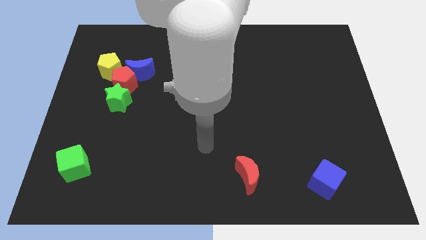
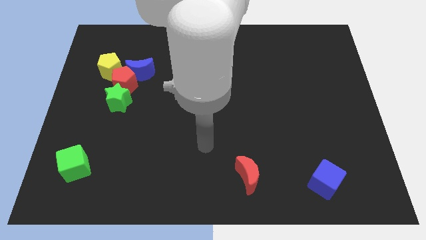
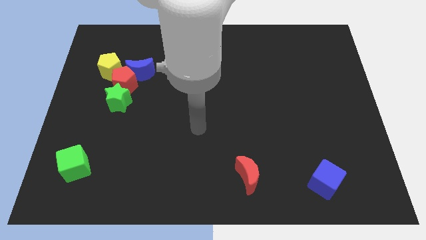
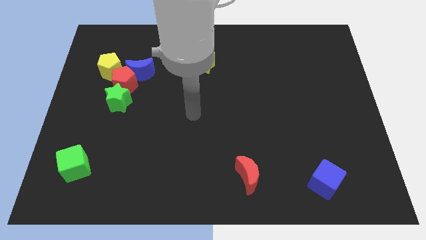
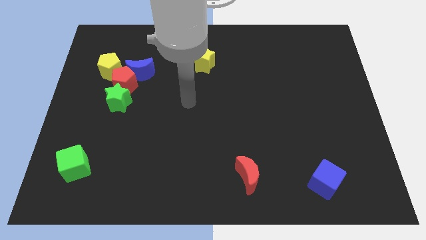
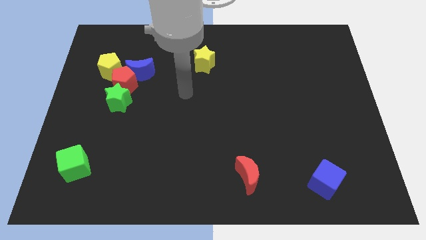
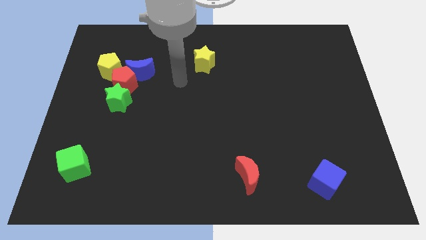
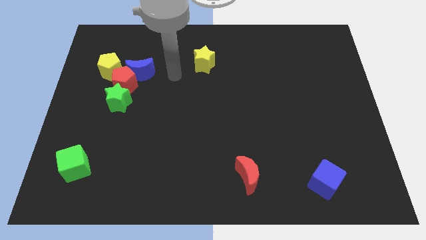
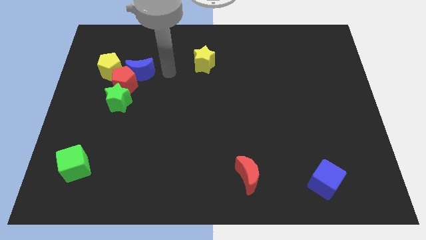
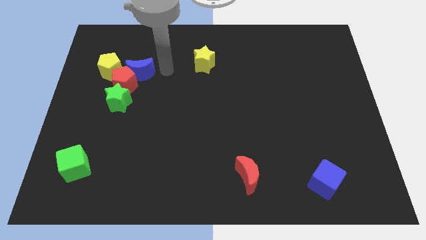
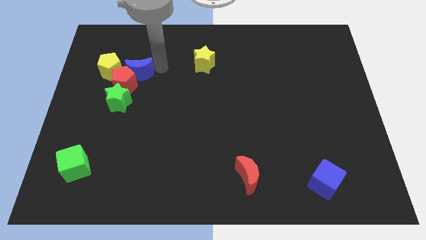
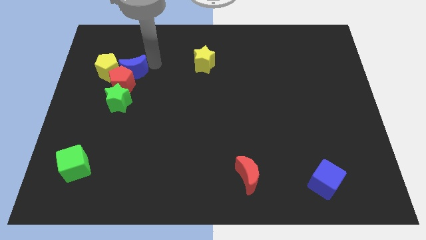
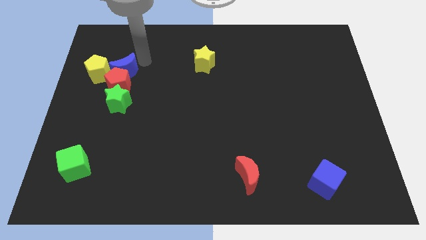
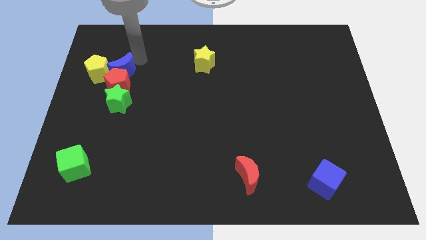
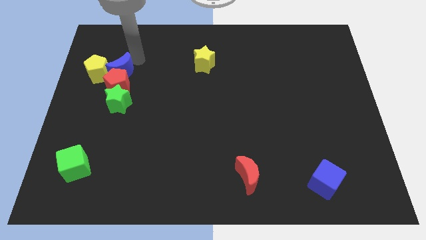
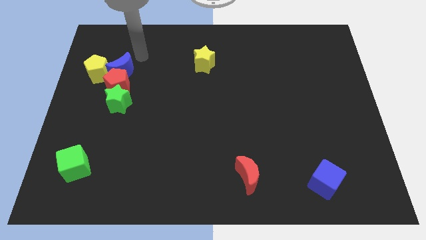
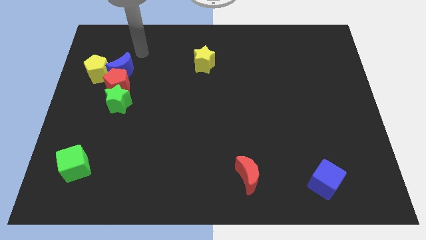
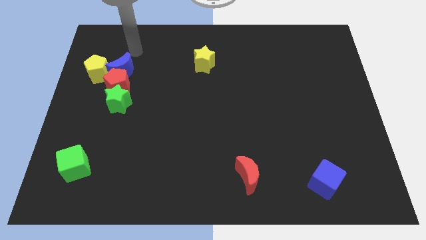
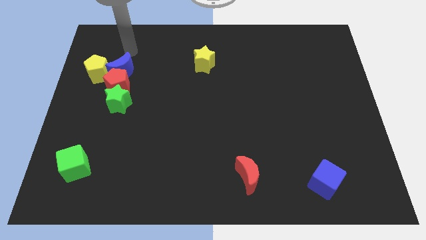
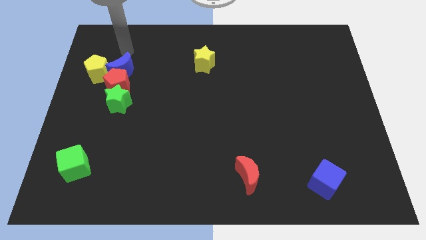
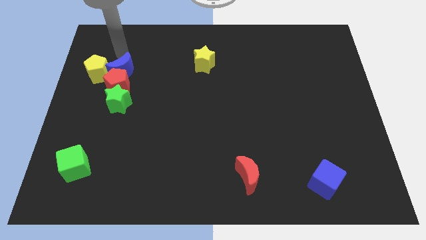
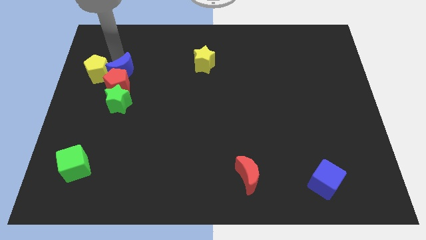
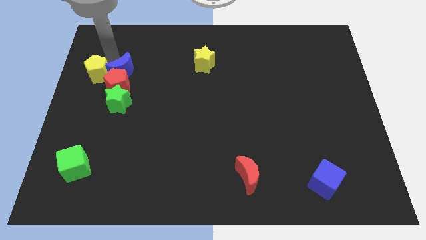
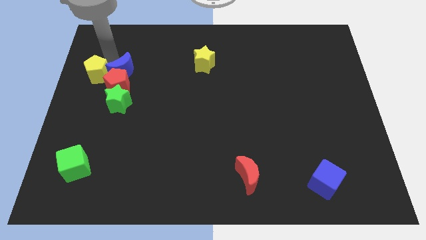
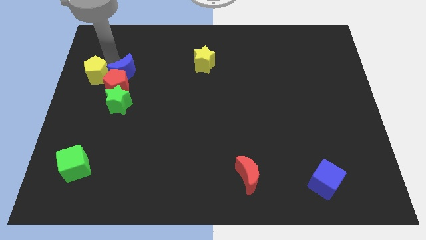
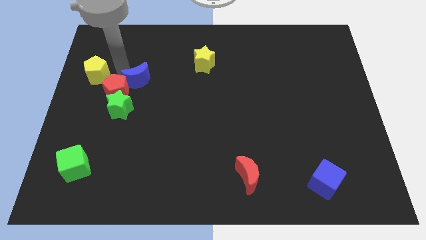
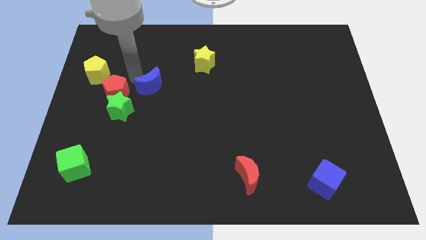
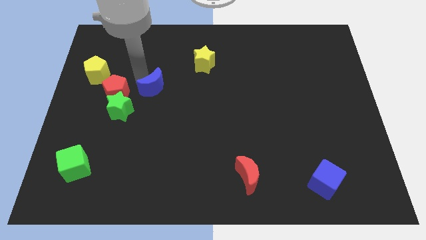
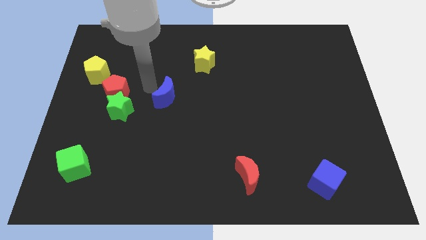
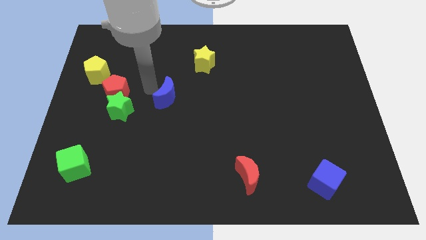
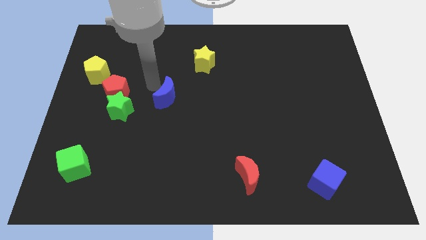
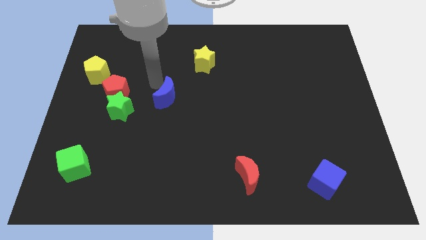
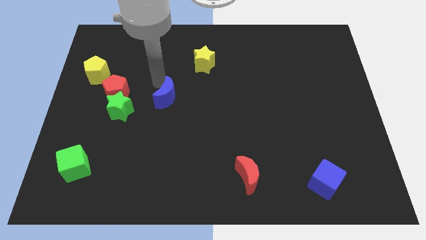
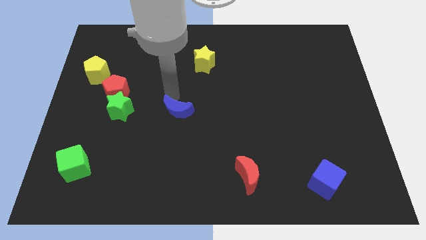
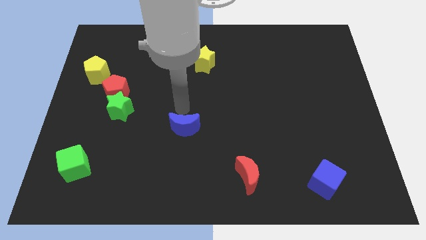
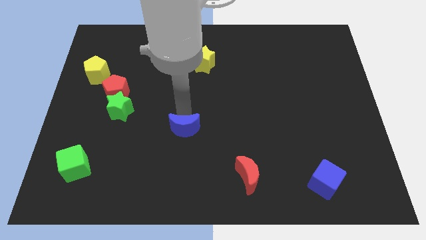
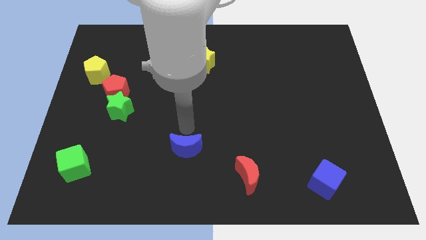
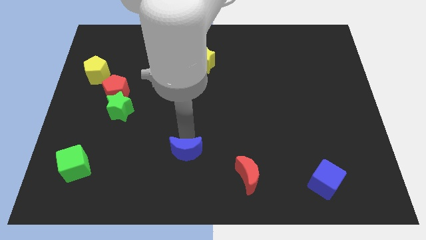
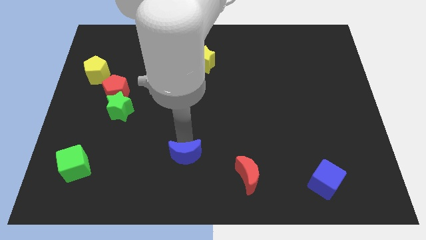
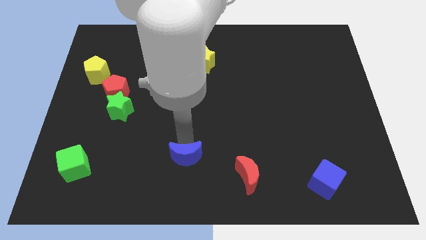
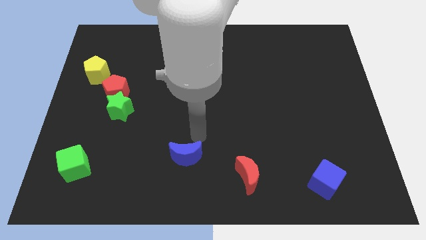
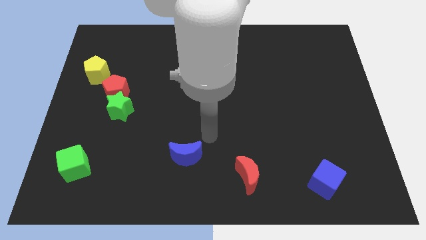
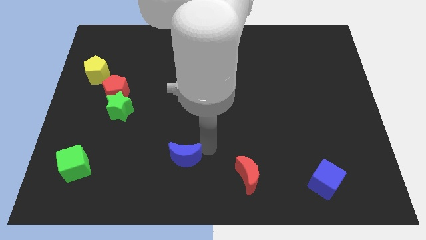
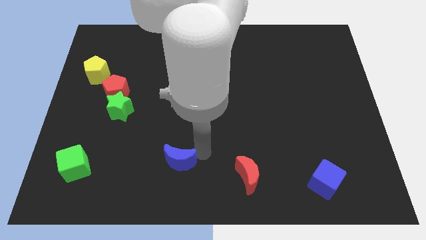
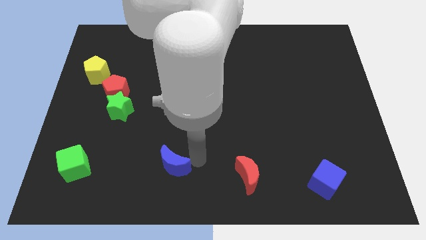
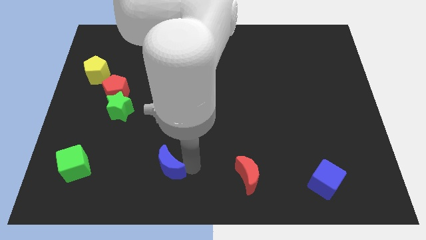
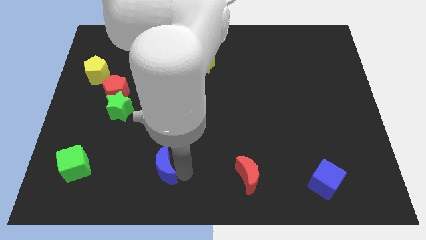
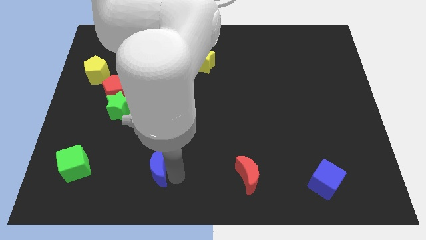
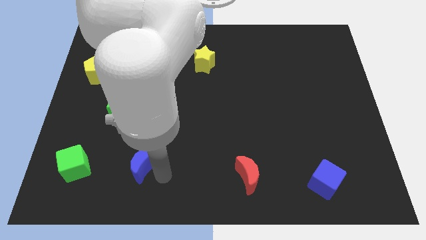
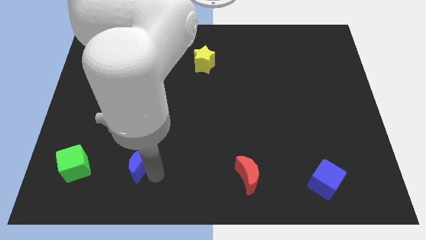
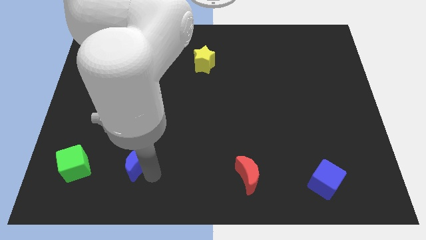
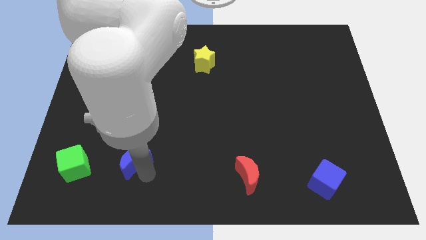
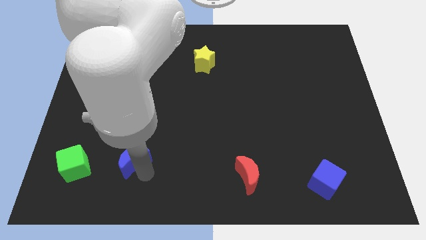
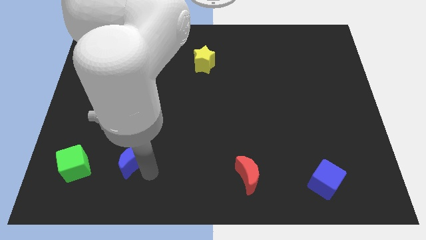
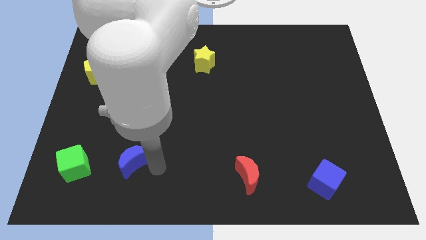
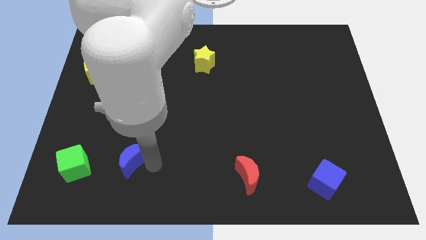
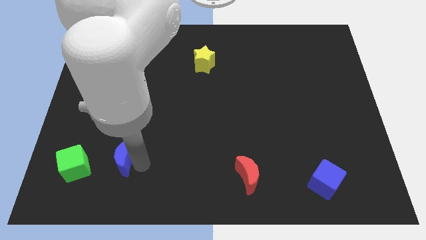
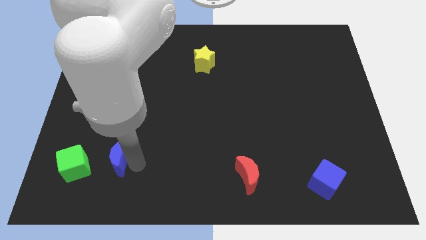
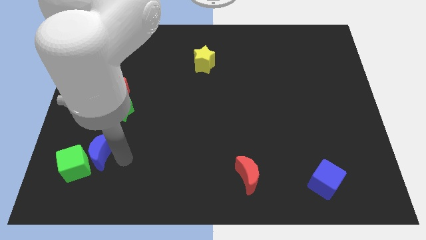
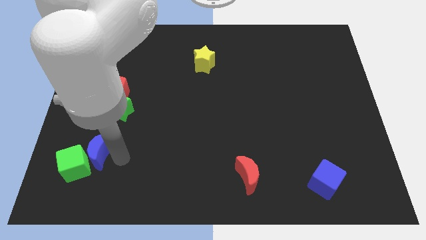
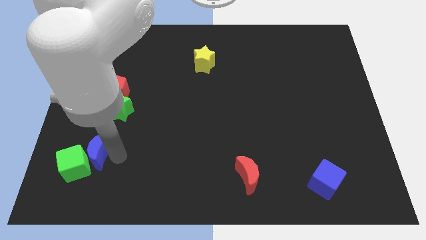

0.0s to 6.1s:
move the blue moon next to the green cube

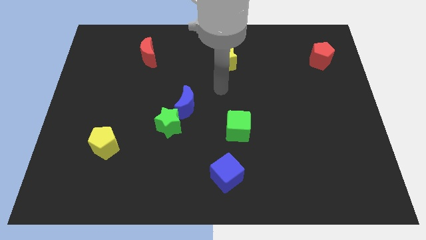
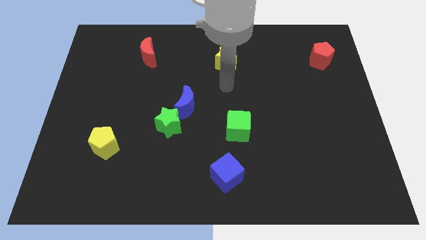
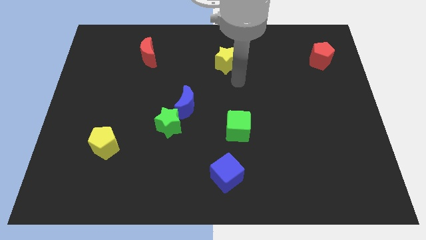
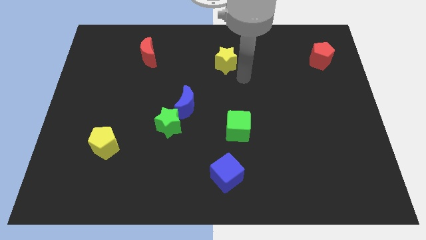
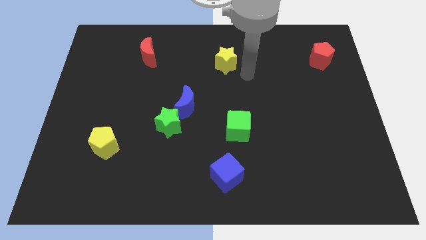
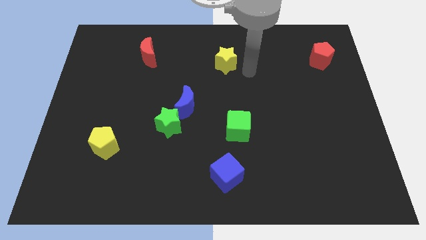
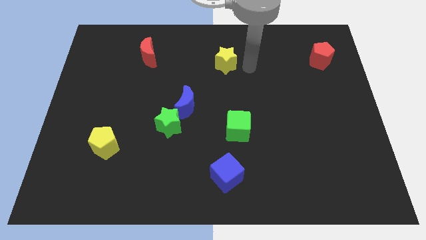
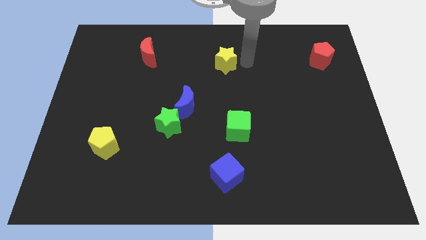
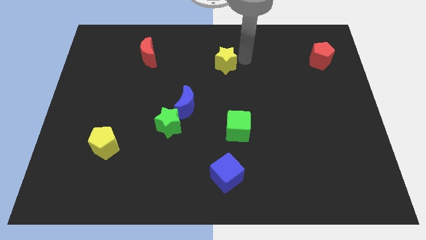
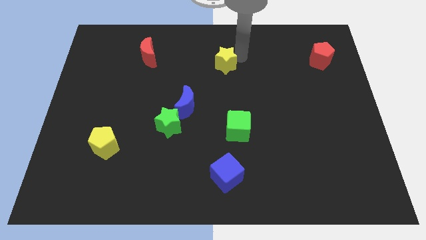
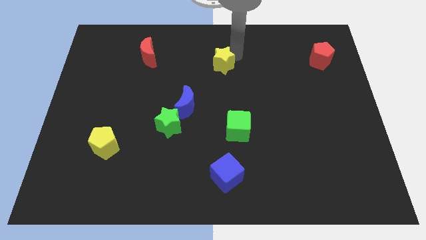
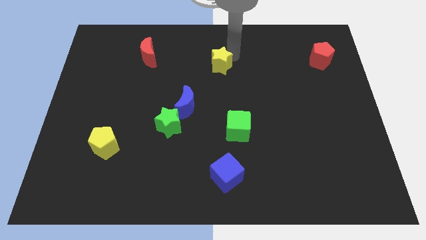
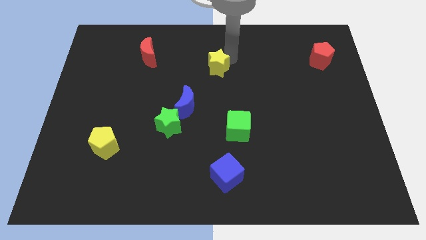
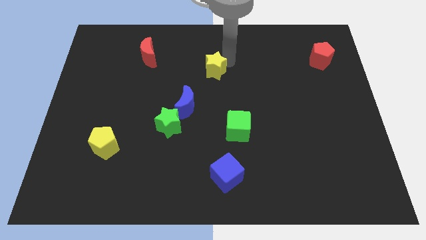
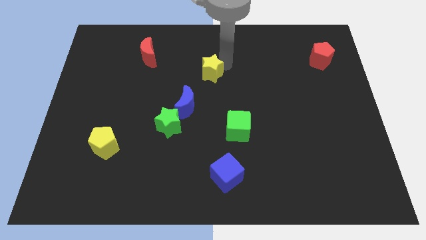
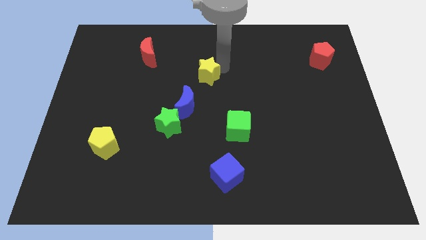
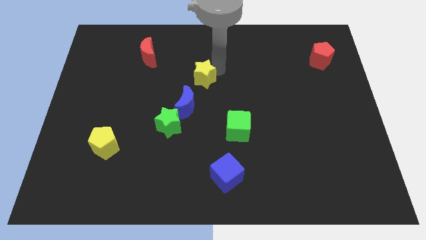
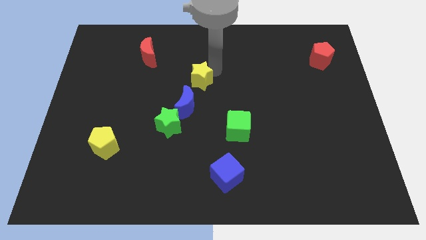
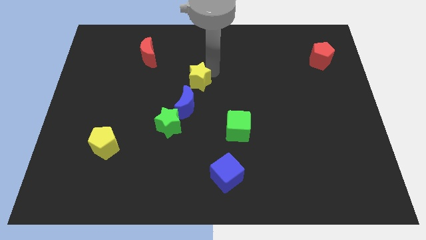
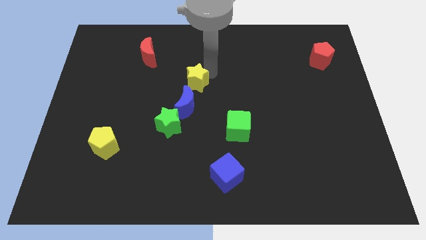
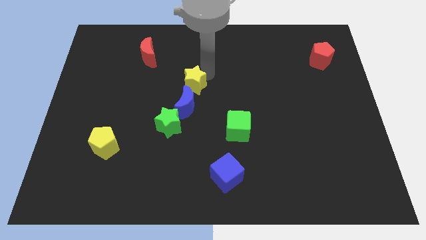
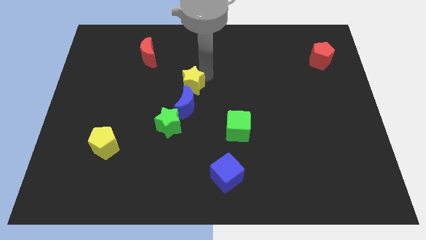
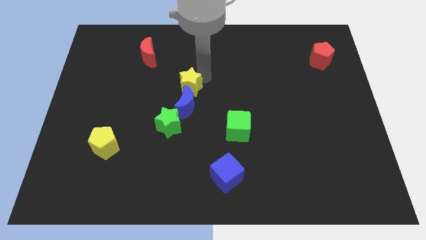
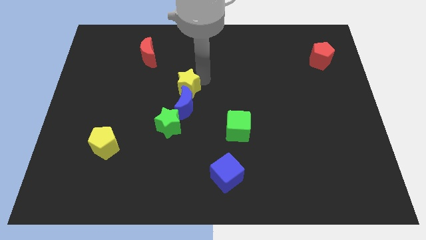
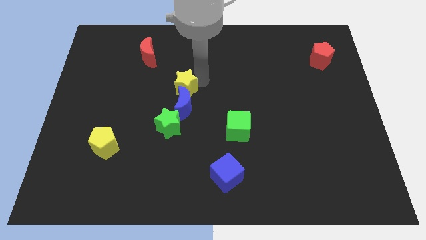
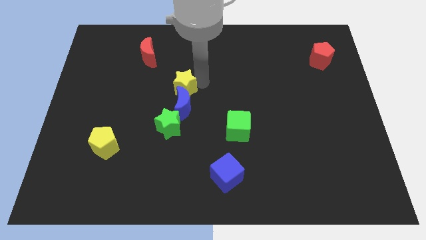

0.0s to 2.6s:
push the yellow star towards the blue moon

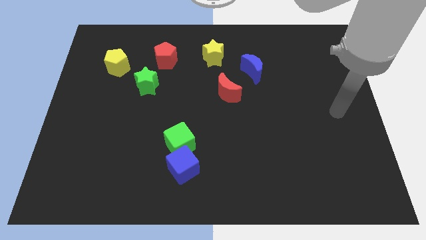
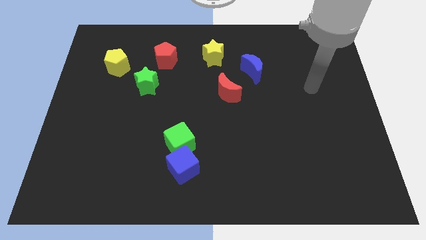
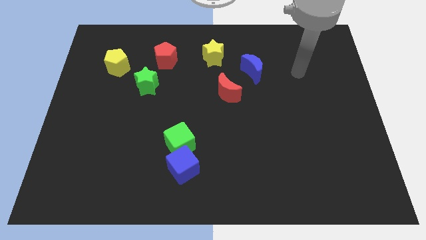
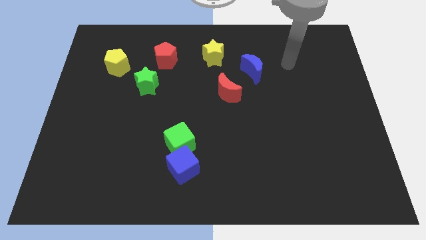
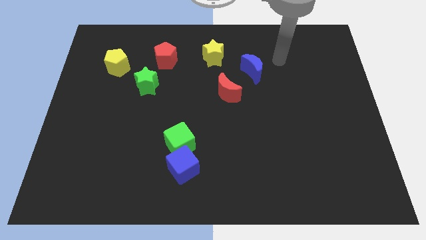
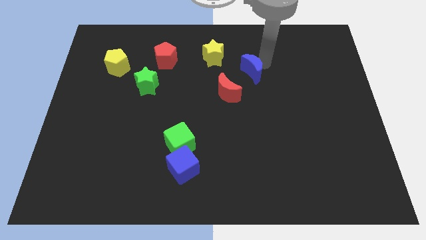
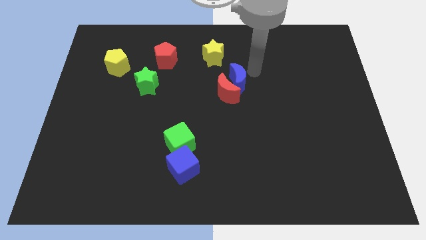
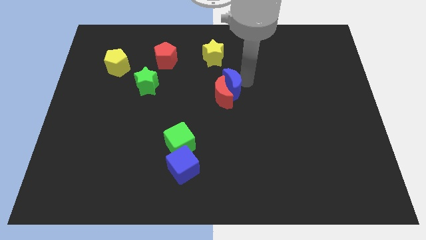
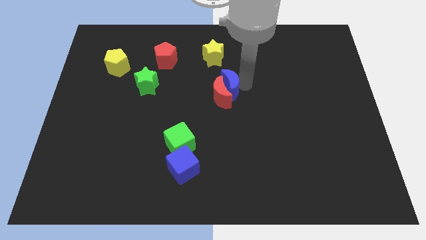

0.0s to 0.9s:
slide the blue moon next to the red moon
